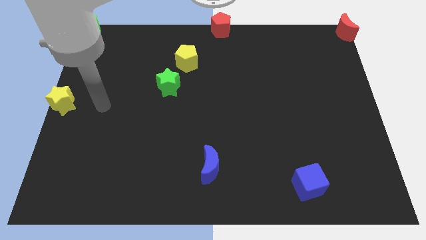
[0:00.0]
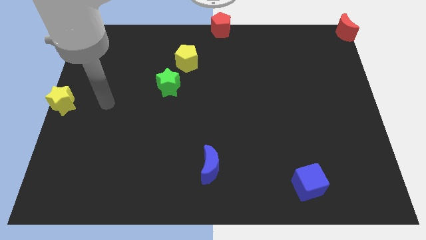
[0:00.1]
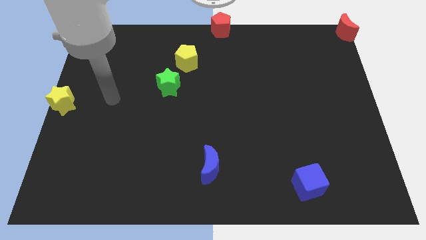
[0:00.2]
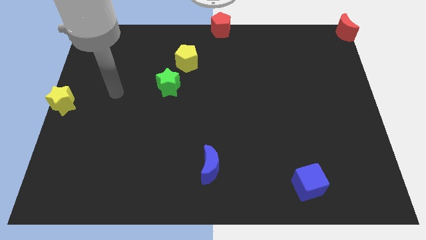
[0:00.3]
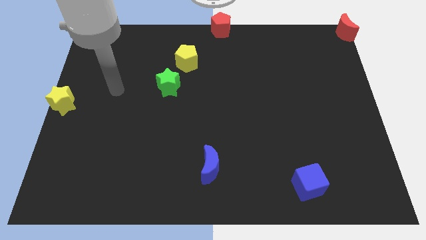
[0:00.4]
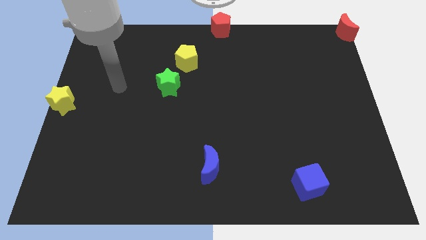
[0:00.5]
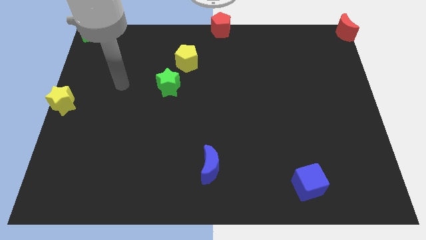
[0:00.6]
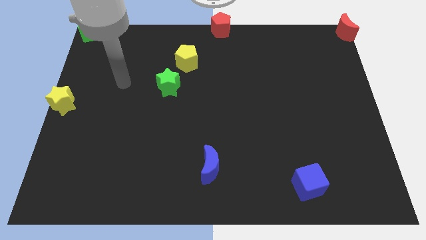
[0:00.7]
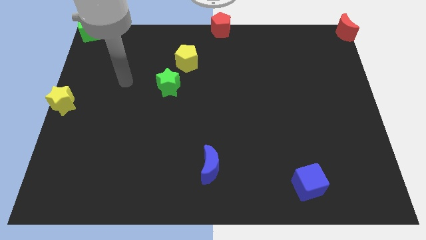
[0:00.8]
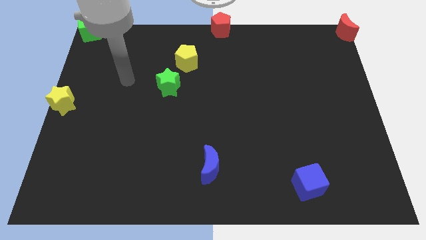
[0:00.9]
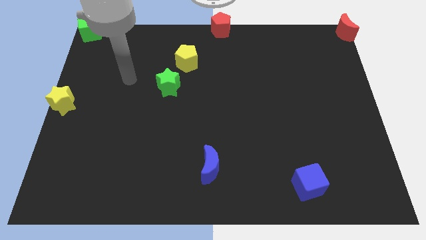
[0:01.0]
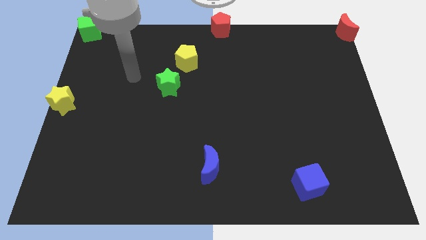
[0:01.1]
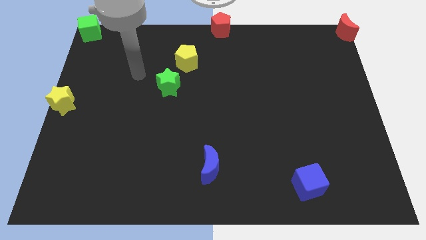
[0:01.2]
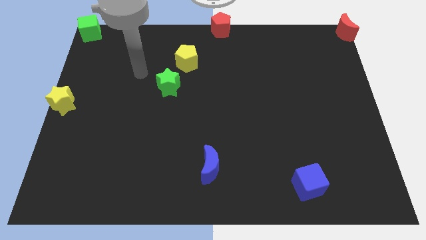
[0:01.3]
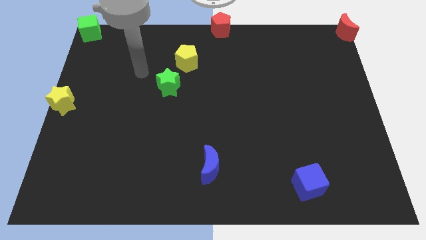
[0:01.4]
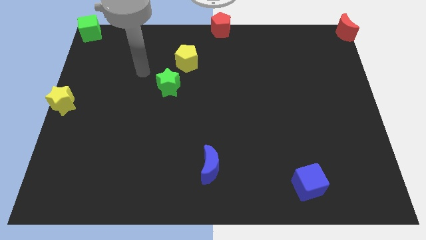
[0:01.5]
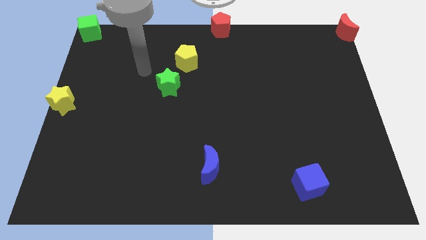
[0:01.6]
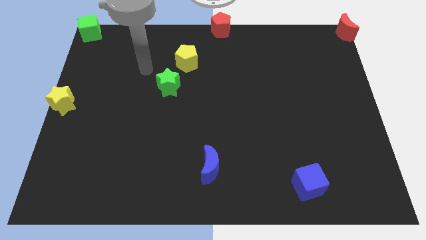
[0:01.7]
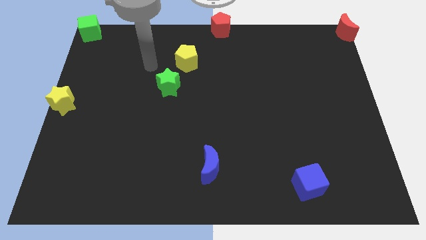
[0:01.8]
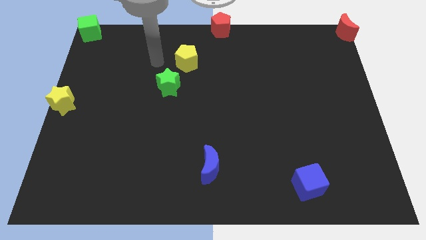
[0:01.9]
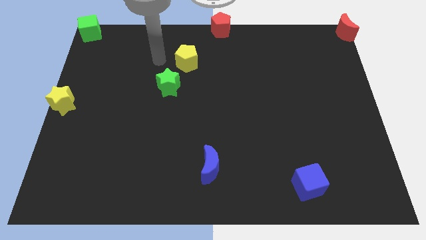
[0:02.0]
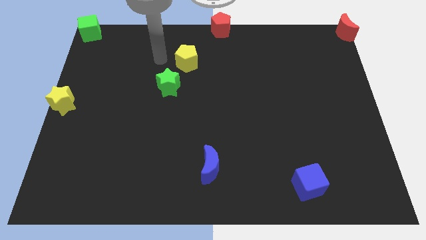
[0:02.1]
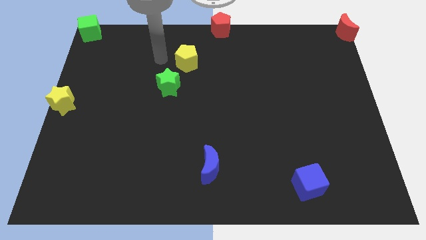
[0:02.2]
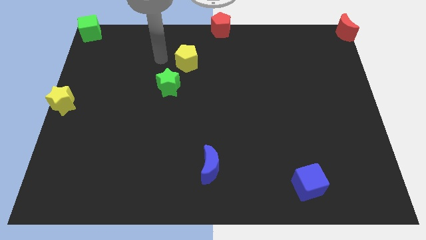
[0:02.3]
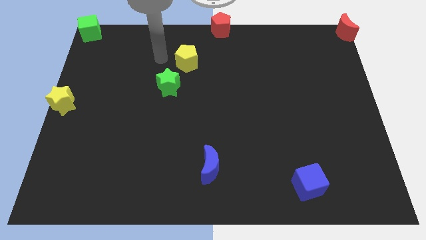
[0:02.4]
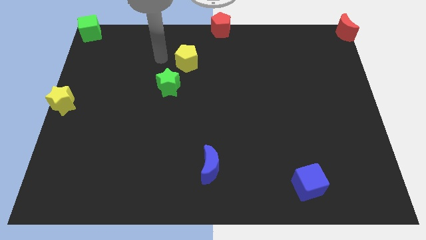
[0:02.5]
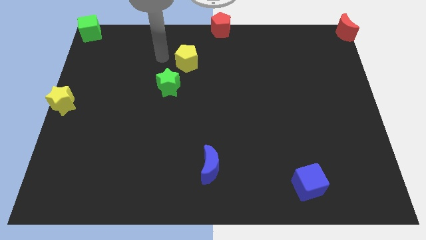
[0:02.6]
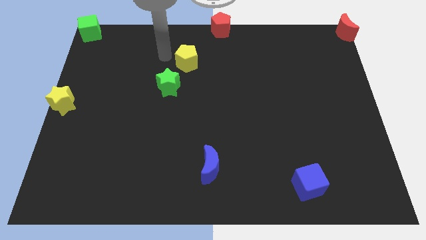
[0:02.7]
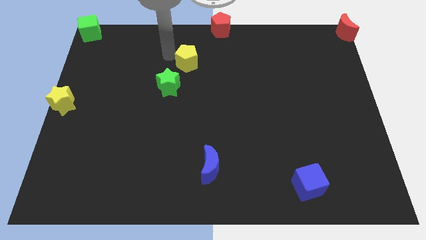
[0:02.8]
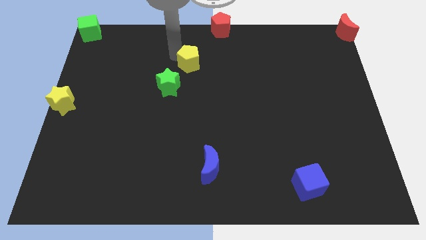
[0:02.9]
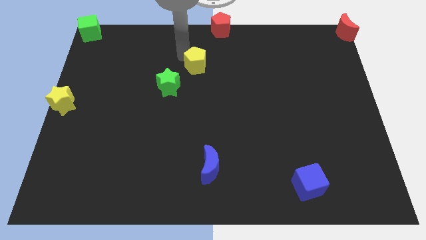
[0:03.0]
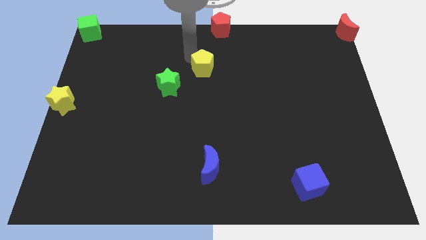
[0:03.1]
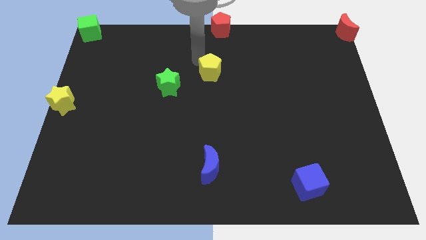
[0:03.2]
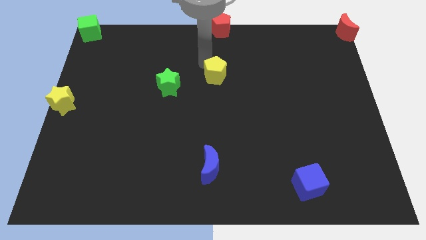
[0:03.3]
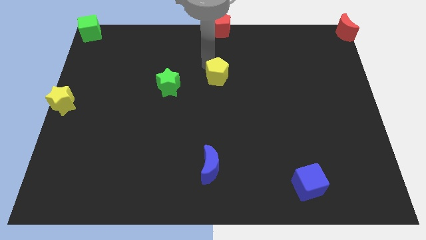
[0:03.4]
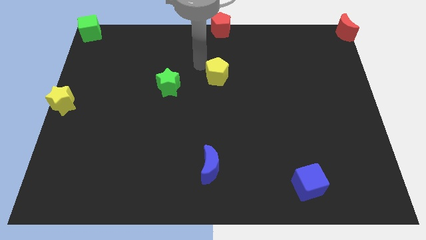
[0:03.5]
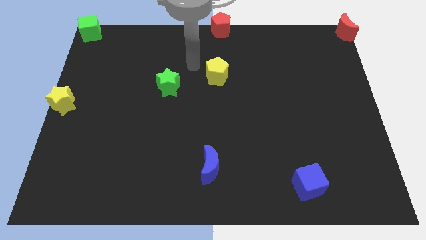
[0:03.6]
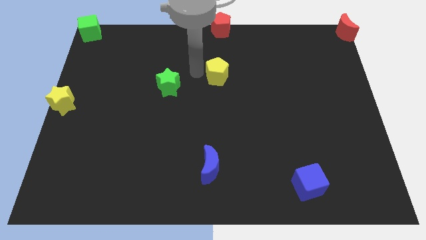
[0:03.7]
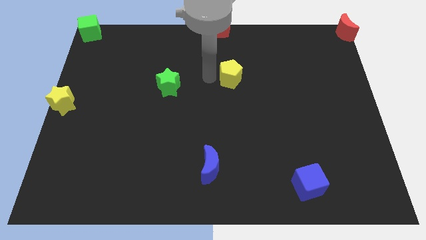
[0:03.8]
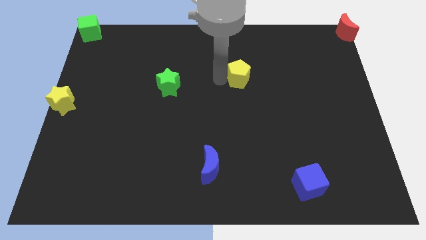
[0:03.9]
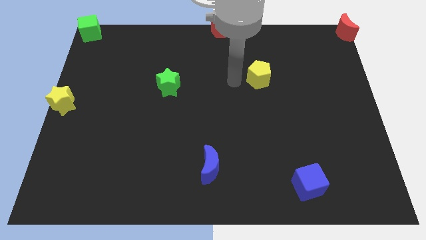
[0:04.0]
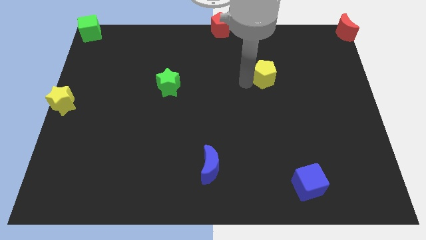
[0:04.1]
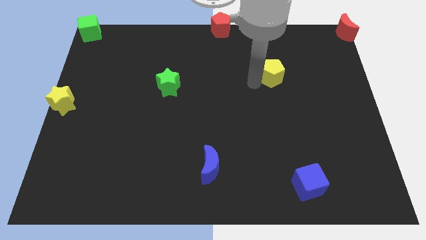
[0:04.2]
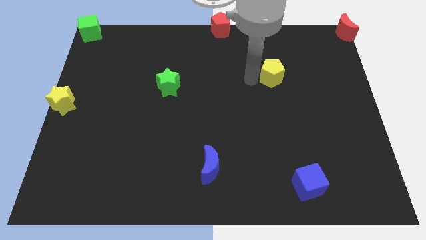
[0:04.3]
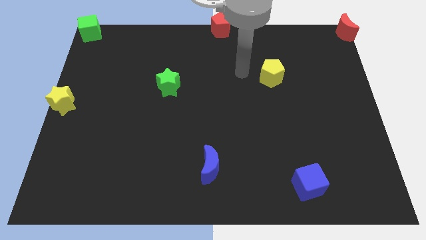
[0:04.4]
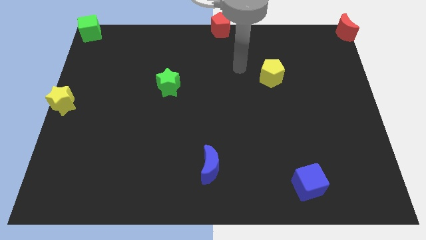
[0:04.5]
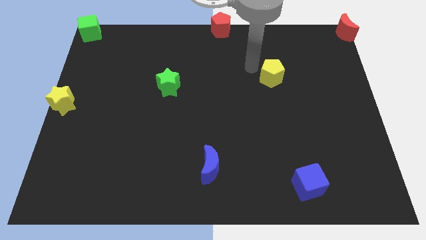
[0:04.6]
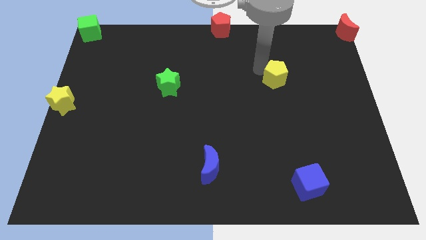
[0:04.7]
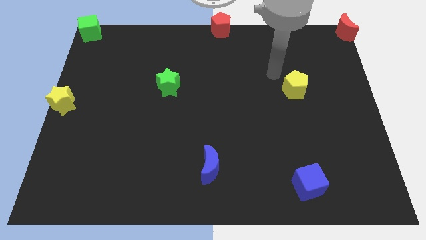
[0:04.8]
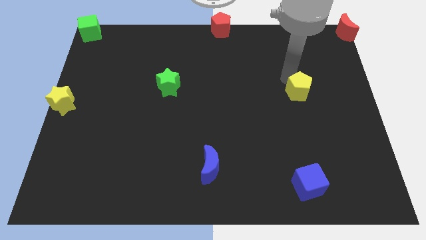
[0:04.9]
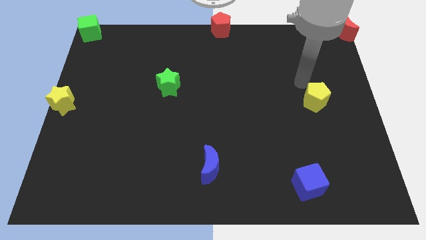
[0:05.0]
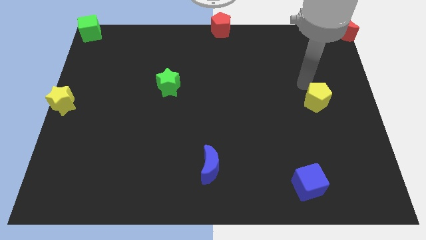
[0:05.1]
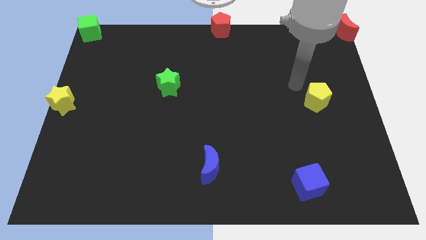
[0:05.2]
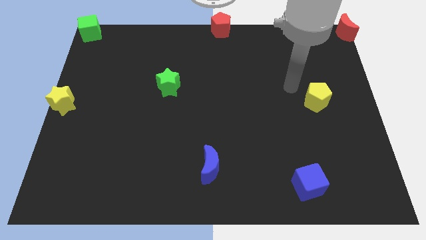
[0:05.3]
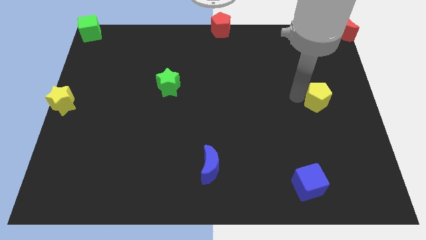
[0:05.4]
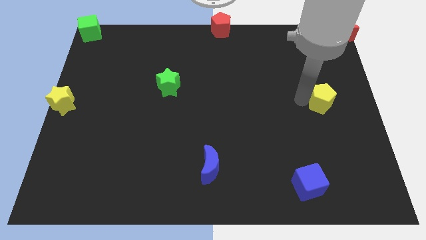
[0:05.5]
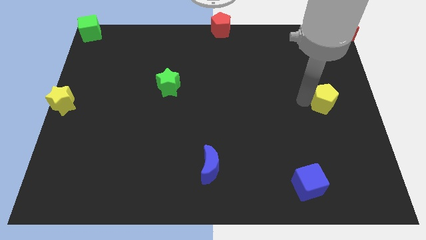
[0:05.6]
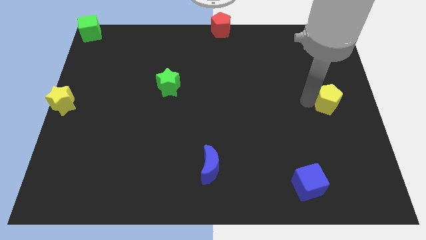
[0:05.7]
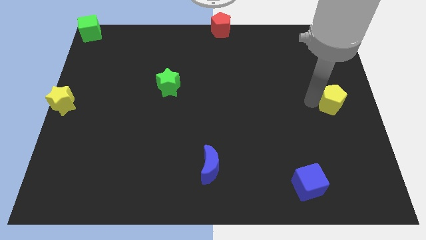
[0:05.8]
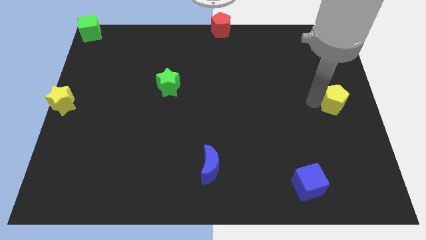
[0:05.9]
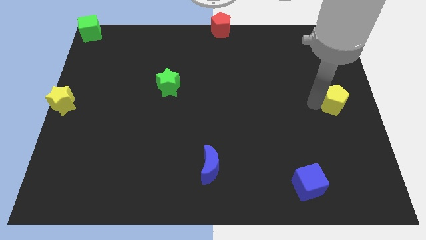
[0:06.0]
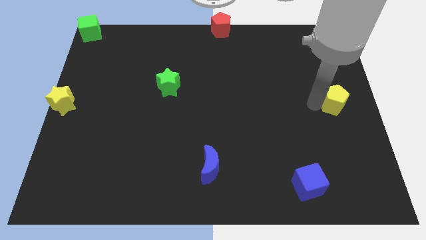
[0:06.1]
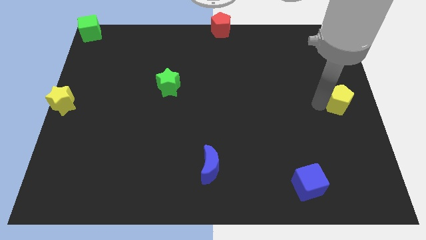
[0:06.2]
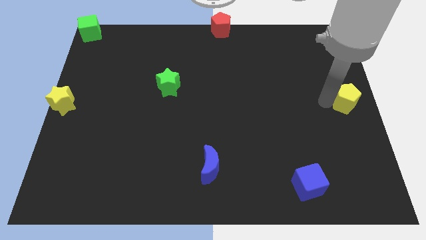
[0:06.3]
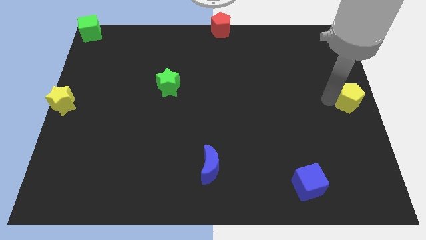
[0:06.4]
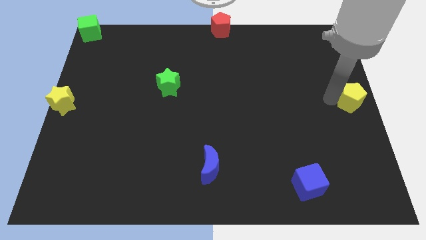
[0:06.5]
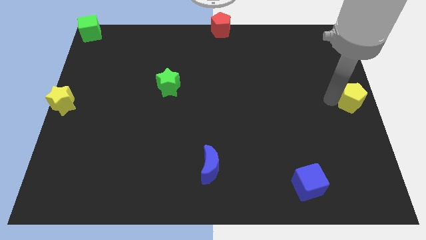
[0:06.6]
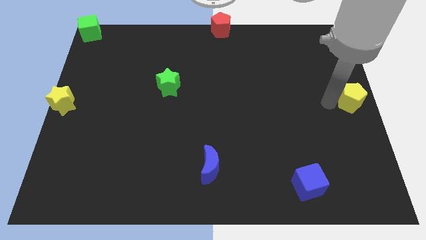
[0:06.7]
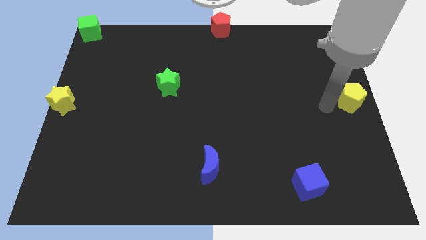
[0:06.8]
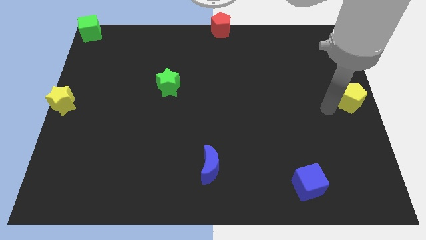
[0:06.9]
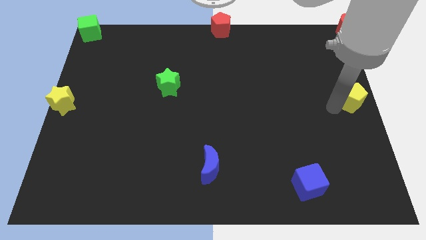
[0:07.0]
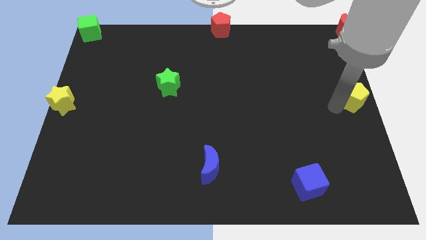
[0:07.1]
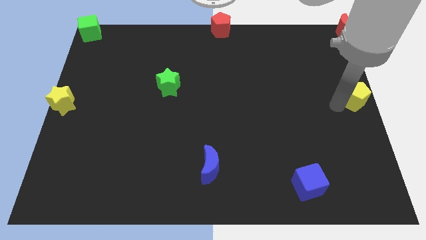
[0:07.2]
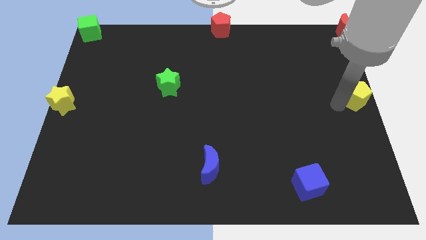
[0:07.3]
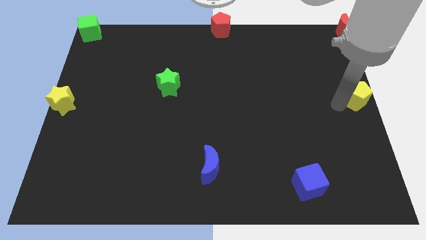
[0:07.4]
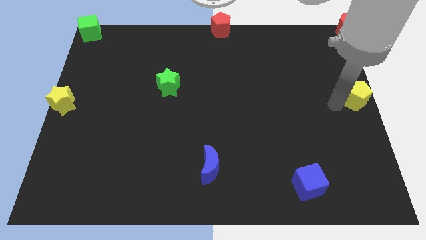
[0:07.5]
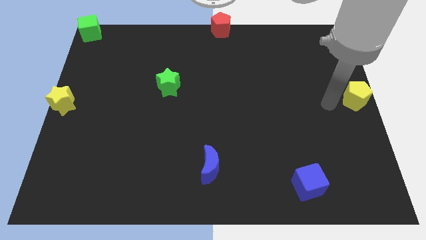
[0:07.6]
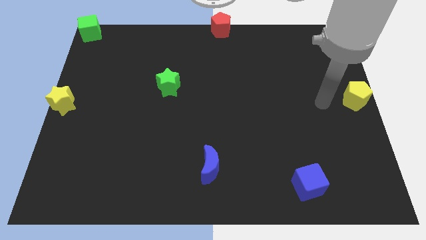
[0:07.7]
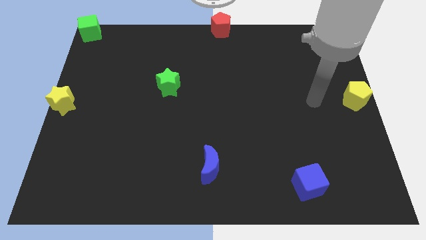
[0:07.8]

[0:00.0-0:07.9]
place the yellow pentagon to center right of the board

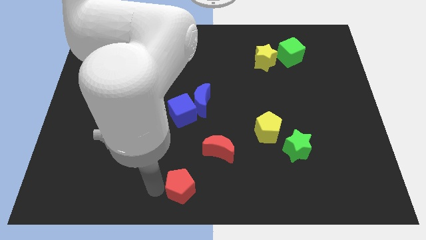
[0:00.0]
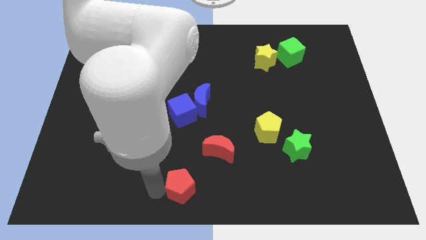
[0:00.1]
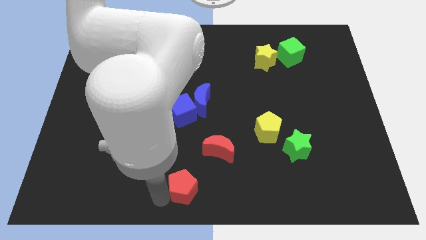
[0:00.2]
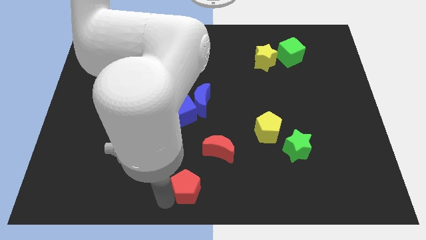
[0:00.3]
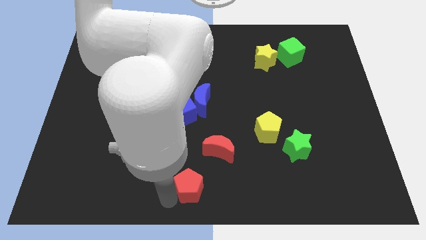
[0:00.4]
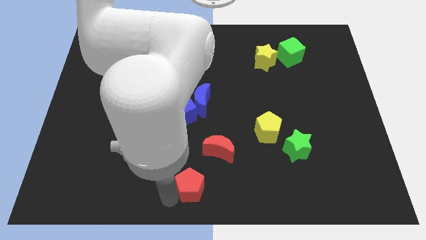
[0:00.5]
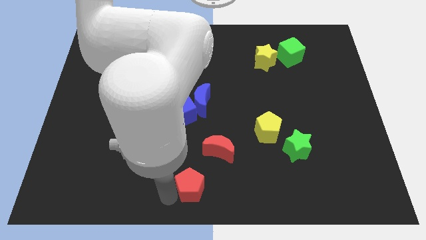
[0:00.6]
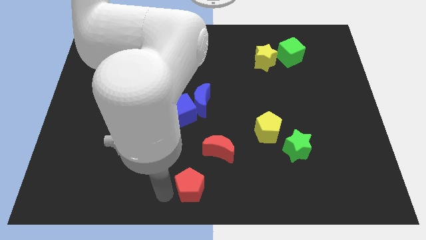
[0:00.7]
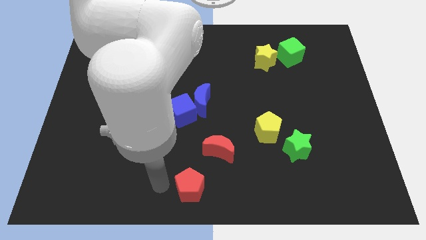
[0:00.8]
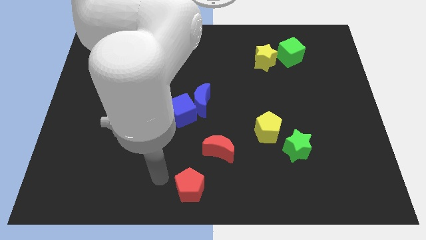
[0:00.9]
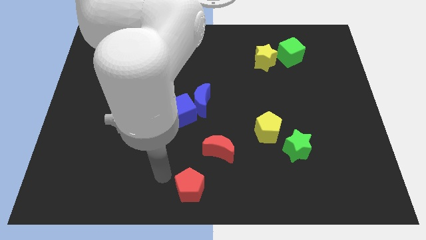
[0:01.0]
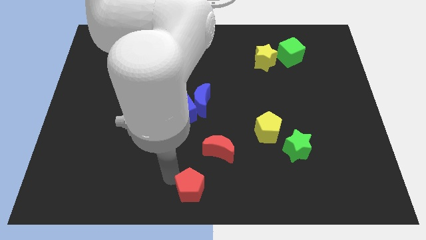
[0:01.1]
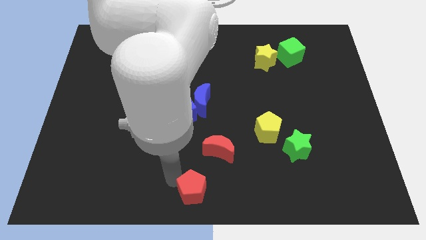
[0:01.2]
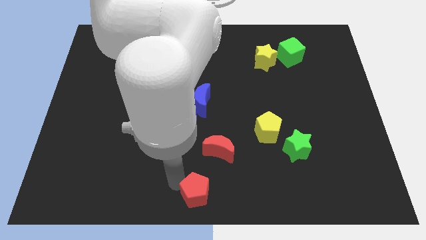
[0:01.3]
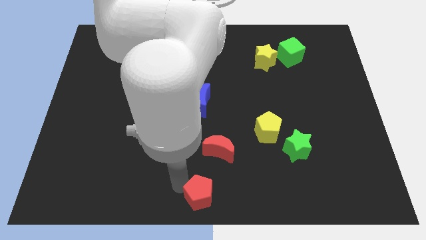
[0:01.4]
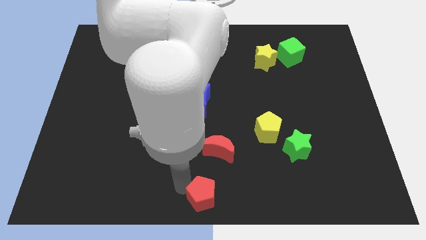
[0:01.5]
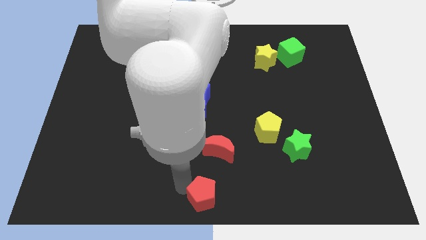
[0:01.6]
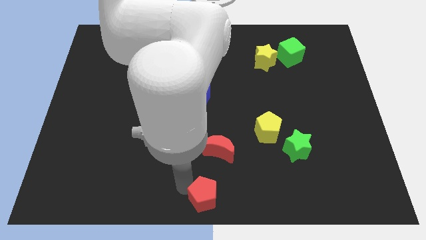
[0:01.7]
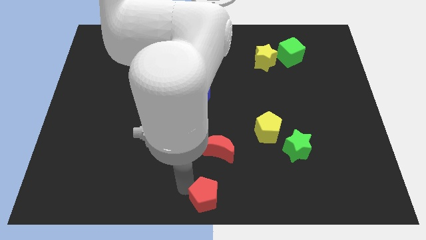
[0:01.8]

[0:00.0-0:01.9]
move red pentagon to the bottom center of the board
